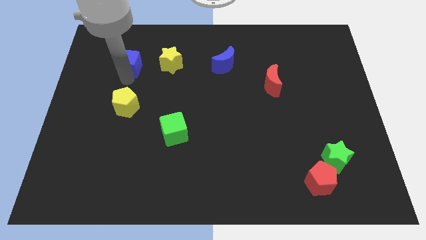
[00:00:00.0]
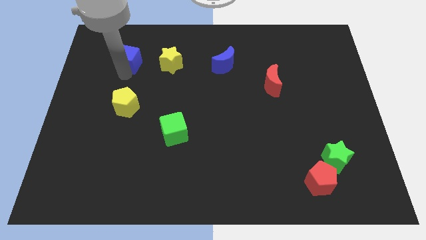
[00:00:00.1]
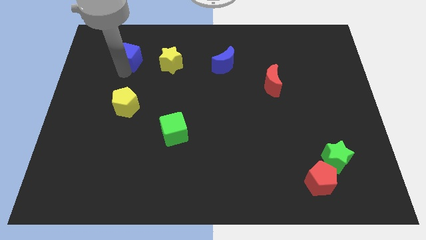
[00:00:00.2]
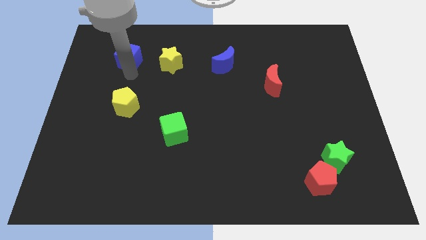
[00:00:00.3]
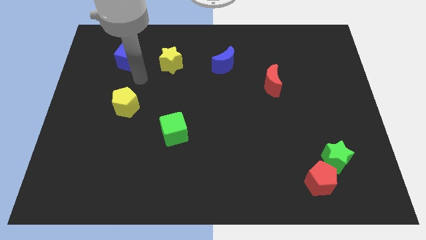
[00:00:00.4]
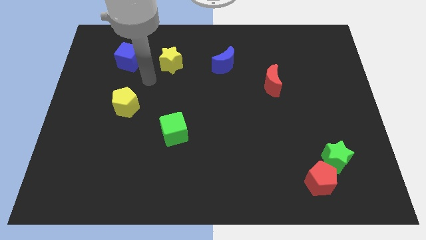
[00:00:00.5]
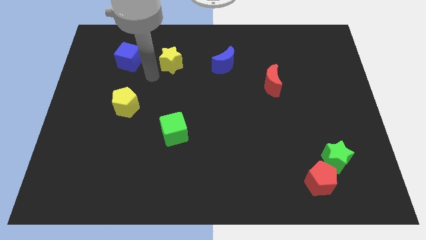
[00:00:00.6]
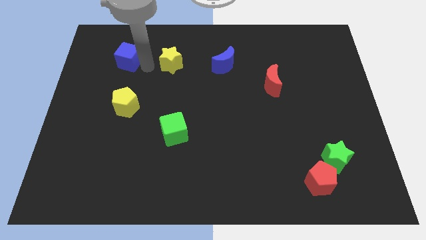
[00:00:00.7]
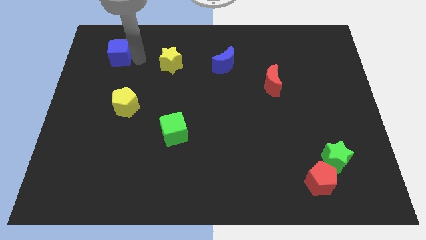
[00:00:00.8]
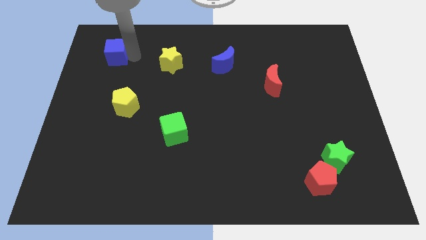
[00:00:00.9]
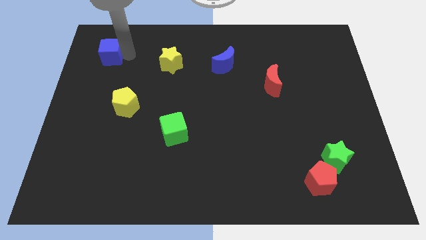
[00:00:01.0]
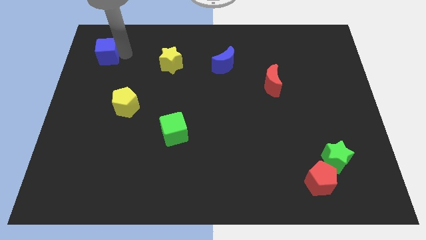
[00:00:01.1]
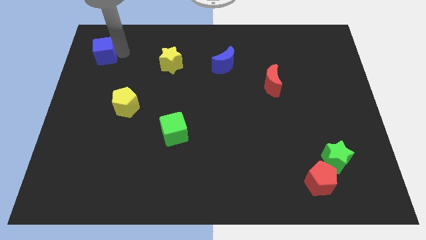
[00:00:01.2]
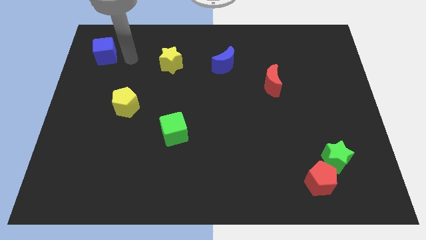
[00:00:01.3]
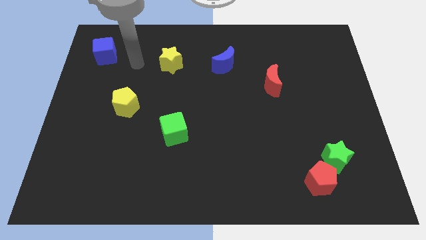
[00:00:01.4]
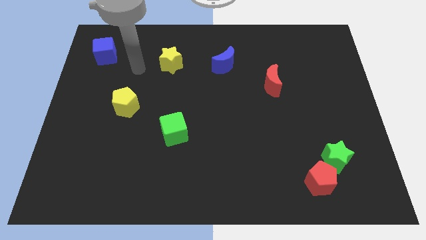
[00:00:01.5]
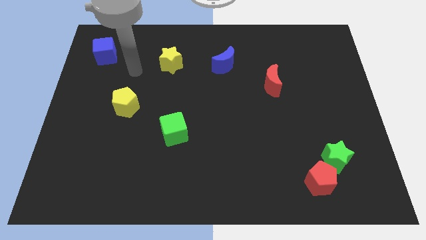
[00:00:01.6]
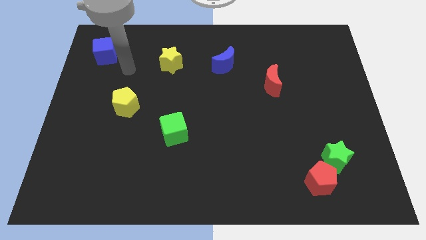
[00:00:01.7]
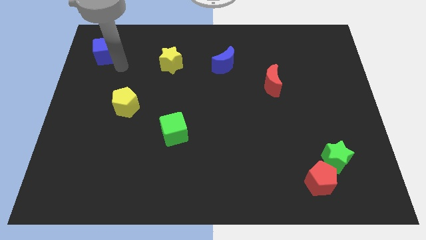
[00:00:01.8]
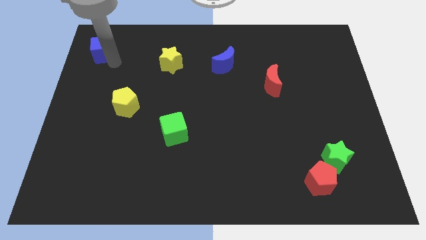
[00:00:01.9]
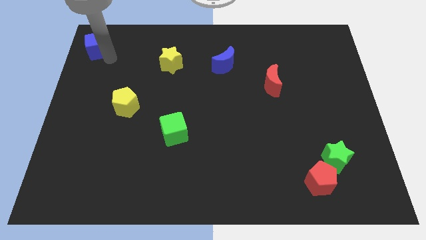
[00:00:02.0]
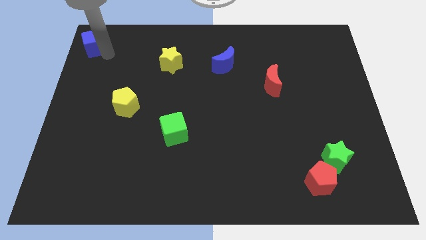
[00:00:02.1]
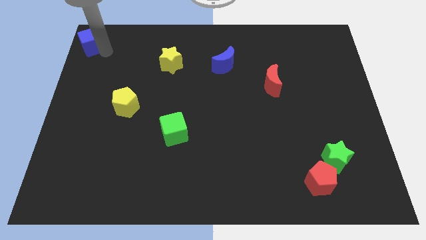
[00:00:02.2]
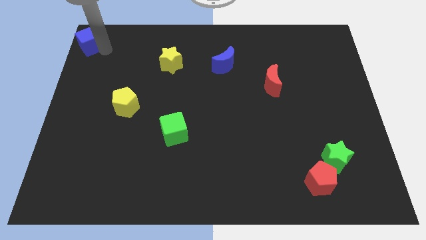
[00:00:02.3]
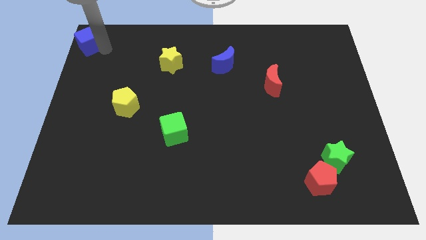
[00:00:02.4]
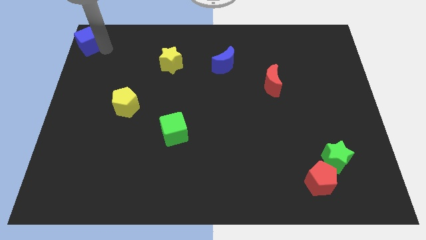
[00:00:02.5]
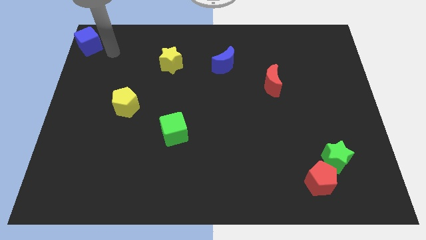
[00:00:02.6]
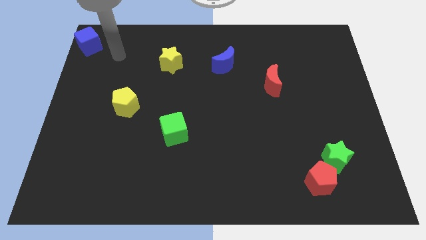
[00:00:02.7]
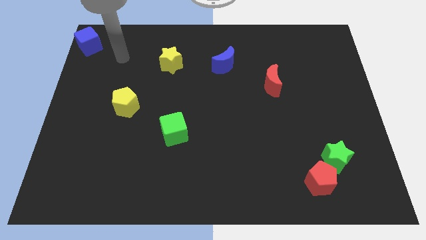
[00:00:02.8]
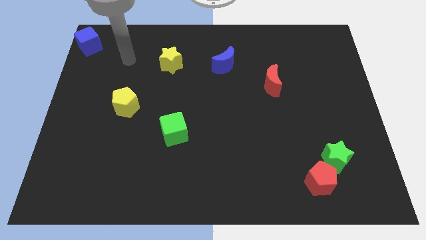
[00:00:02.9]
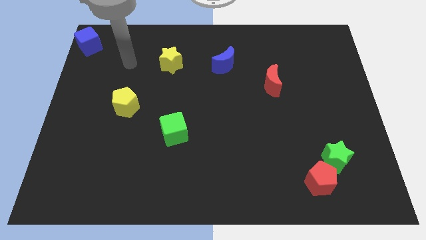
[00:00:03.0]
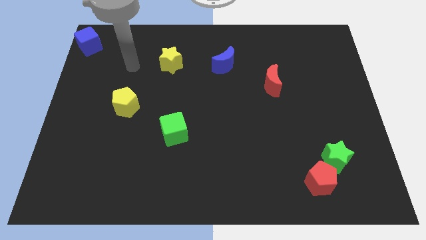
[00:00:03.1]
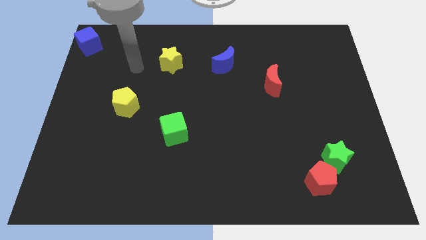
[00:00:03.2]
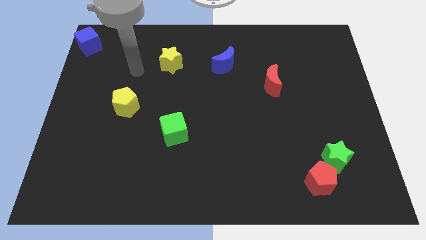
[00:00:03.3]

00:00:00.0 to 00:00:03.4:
move blue cube towards the top left corner

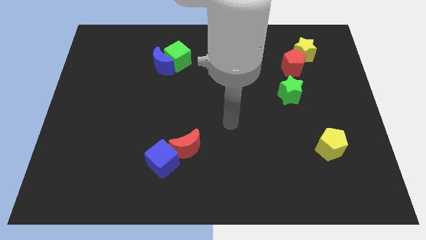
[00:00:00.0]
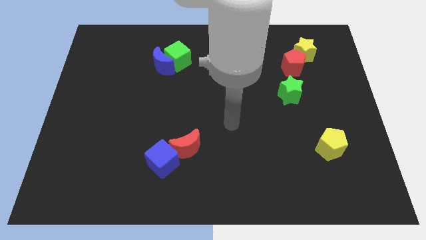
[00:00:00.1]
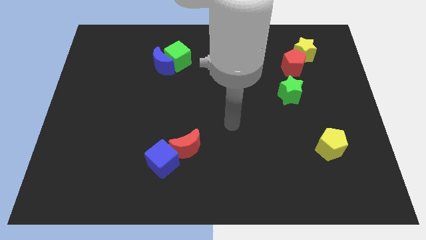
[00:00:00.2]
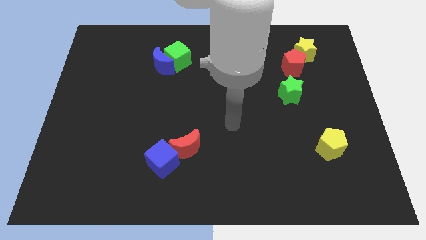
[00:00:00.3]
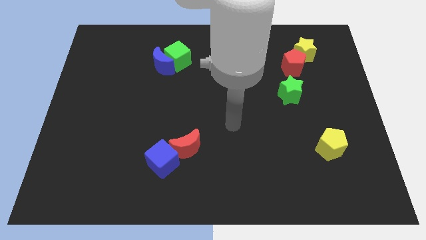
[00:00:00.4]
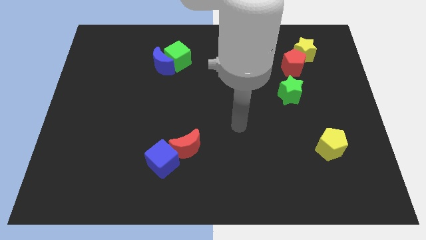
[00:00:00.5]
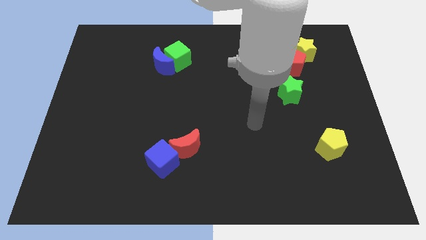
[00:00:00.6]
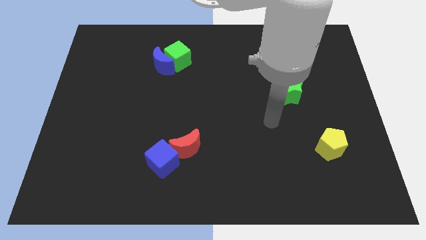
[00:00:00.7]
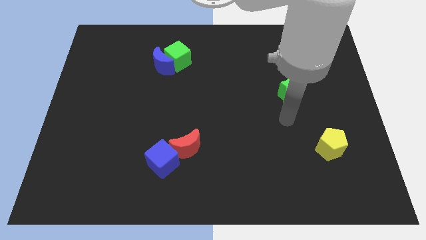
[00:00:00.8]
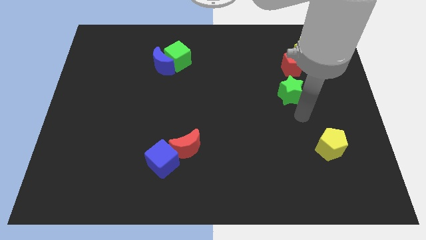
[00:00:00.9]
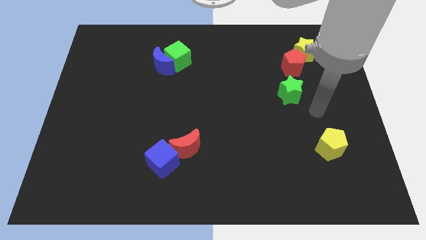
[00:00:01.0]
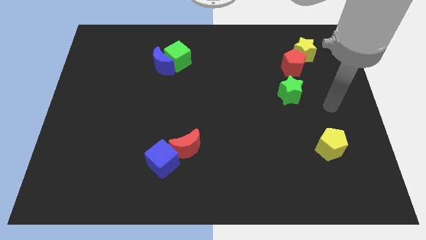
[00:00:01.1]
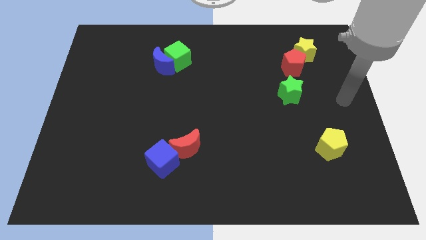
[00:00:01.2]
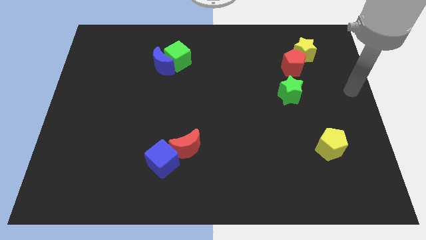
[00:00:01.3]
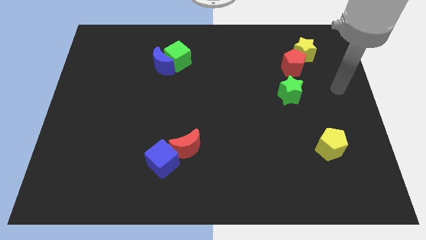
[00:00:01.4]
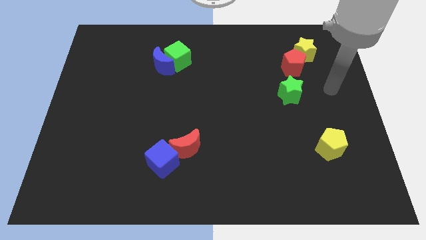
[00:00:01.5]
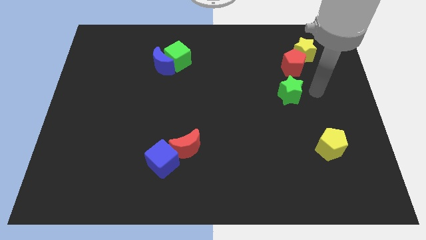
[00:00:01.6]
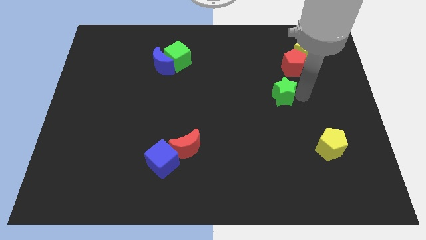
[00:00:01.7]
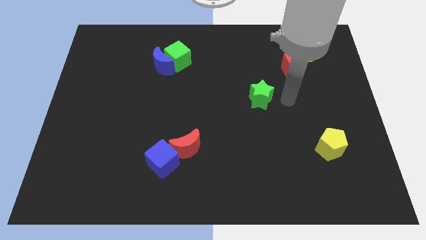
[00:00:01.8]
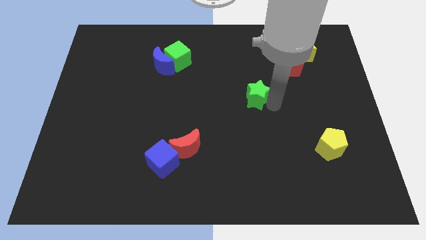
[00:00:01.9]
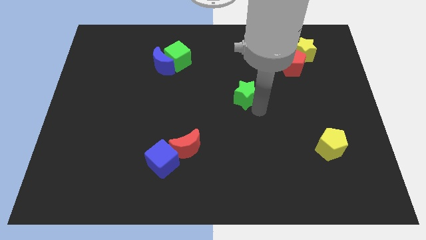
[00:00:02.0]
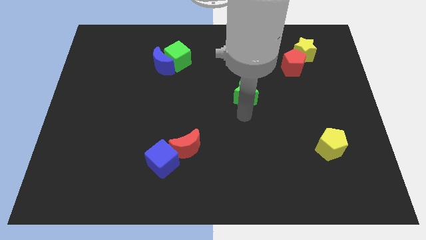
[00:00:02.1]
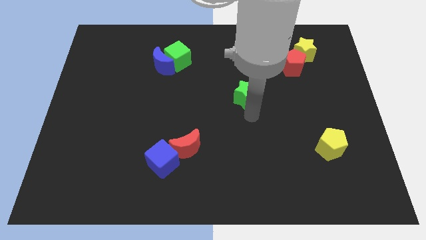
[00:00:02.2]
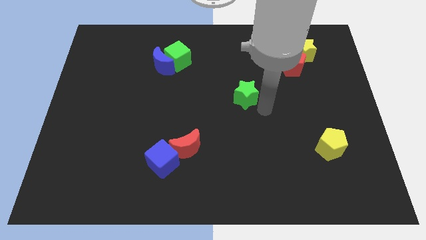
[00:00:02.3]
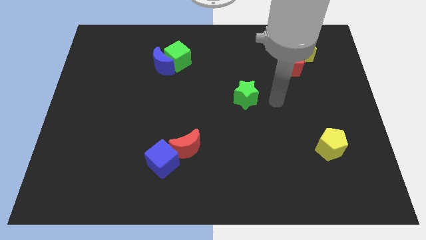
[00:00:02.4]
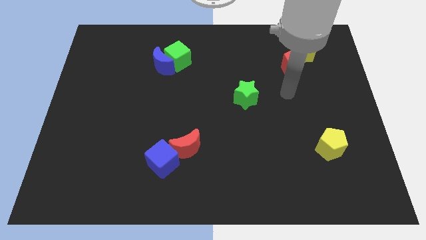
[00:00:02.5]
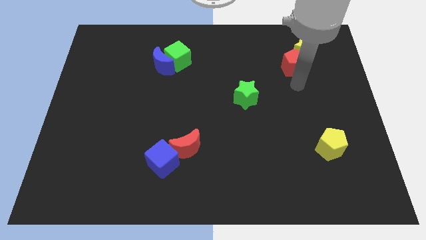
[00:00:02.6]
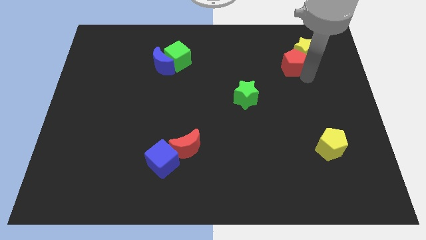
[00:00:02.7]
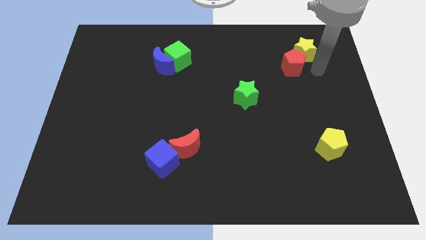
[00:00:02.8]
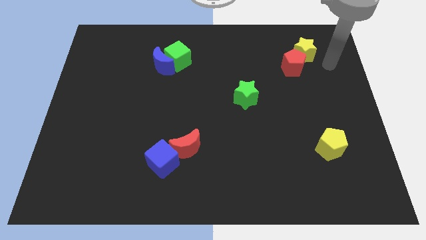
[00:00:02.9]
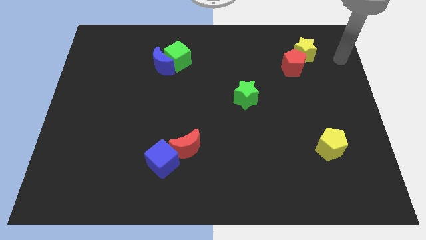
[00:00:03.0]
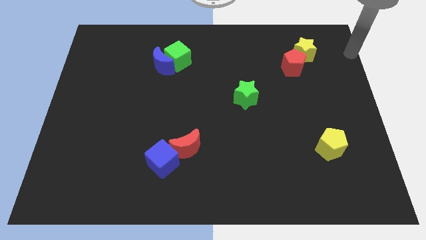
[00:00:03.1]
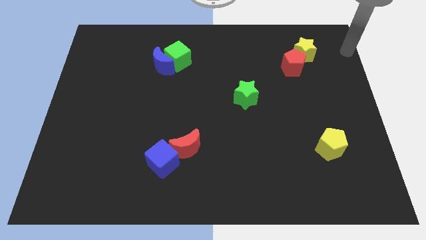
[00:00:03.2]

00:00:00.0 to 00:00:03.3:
move green star towards the center of the board

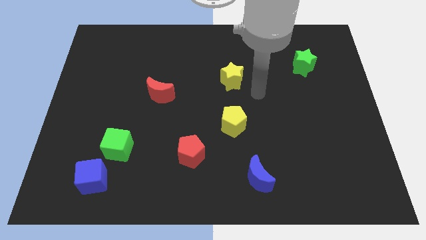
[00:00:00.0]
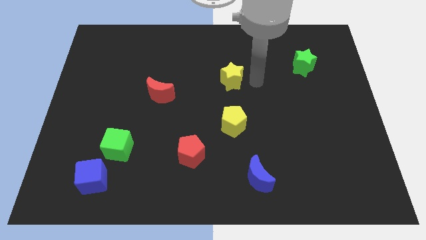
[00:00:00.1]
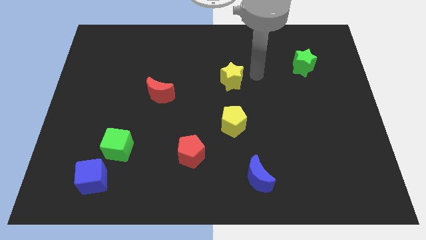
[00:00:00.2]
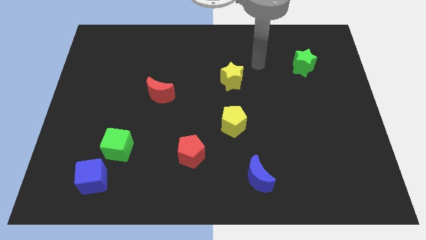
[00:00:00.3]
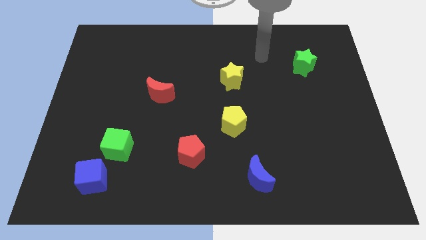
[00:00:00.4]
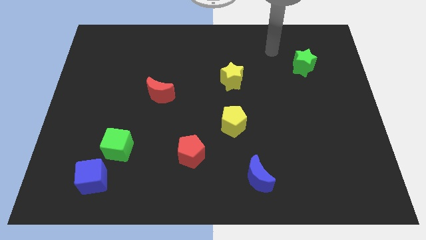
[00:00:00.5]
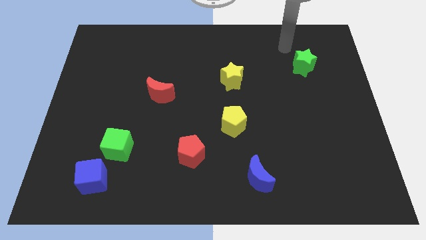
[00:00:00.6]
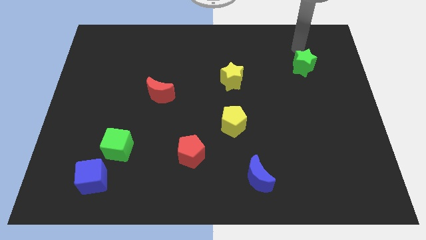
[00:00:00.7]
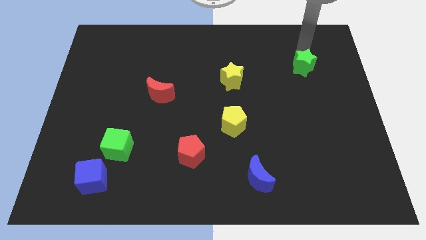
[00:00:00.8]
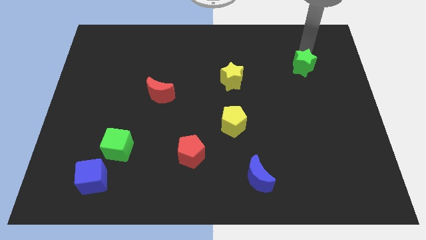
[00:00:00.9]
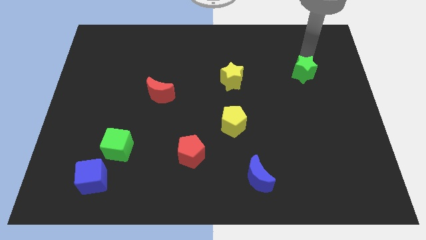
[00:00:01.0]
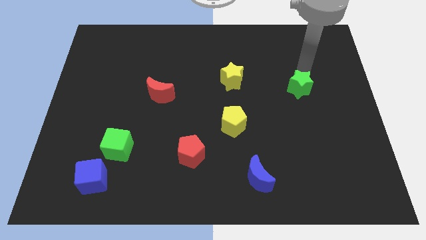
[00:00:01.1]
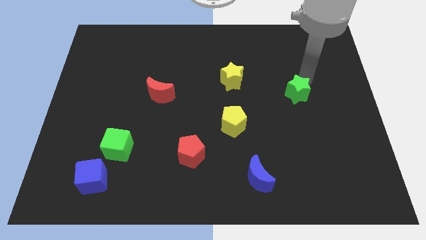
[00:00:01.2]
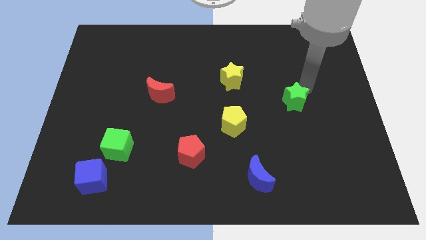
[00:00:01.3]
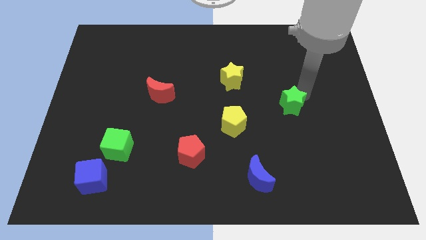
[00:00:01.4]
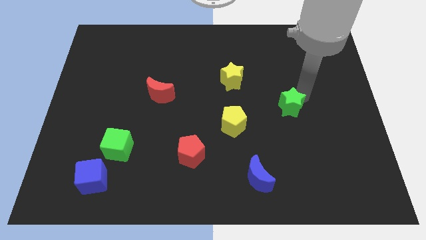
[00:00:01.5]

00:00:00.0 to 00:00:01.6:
push the green star slightly towards downwards

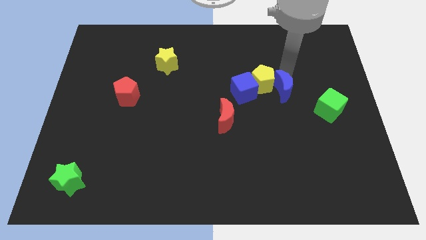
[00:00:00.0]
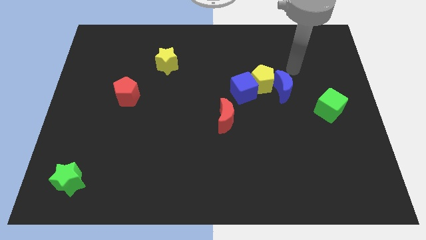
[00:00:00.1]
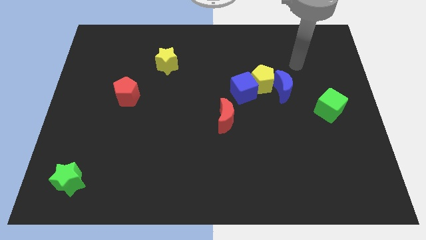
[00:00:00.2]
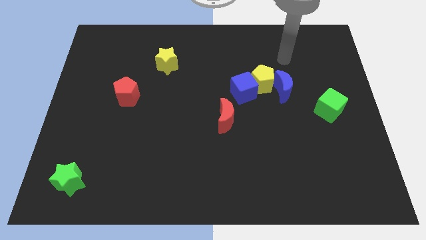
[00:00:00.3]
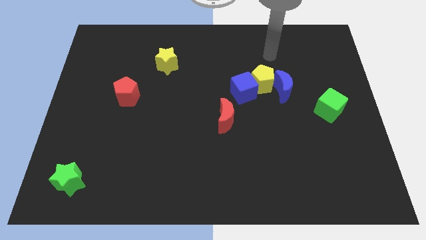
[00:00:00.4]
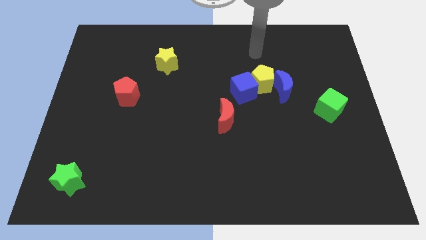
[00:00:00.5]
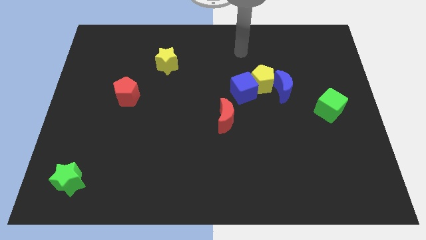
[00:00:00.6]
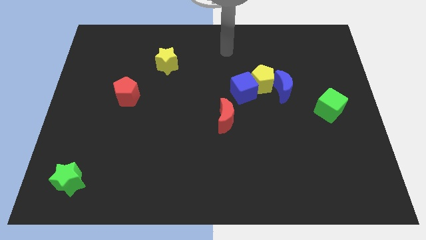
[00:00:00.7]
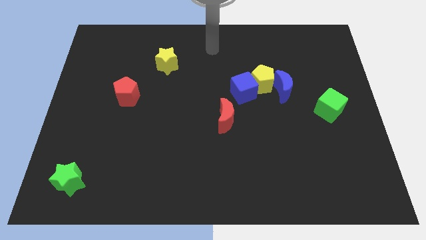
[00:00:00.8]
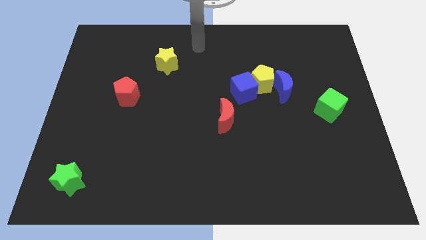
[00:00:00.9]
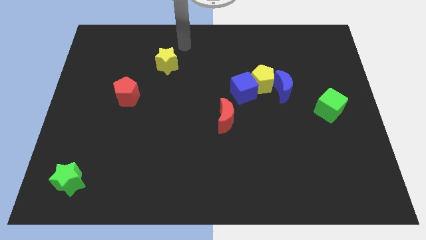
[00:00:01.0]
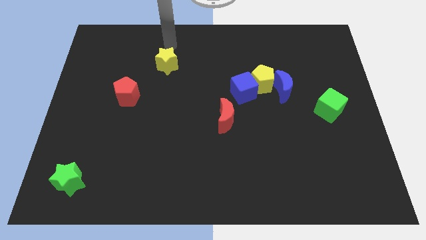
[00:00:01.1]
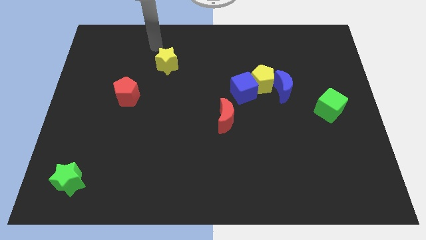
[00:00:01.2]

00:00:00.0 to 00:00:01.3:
move arm above the yellow star
